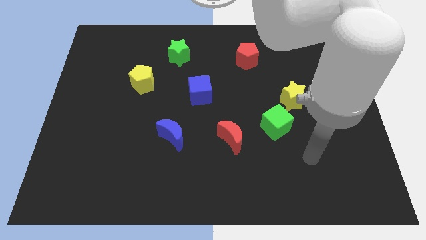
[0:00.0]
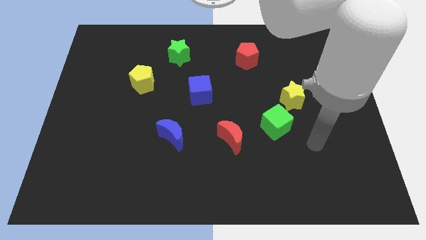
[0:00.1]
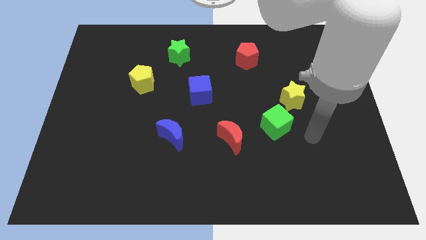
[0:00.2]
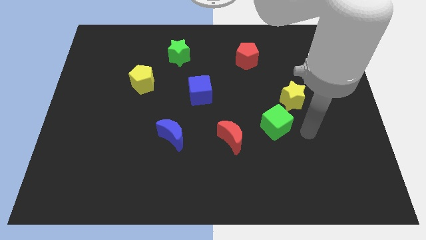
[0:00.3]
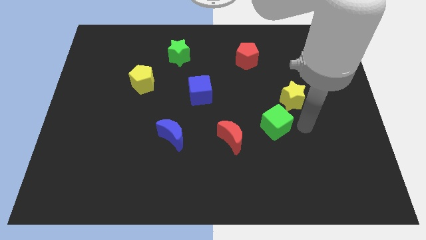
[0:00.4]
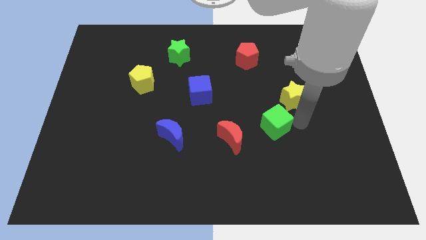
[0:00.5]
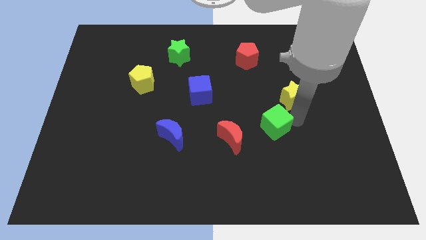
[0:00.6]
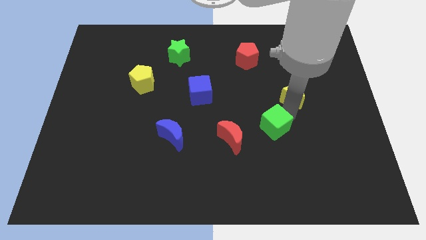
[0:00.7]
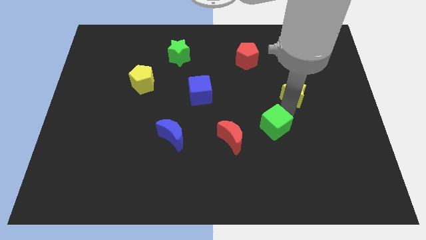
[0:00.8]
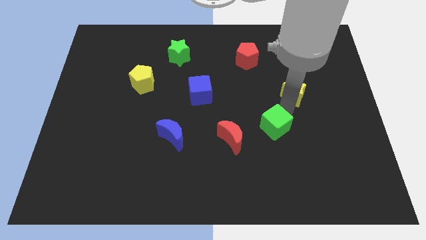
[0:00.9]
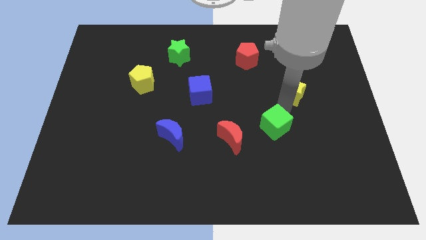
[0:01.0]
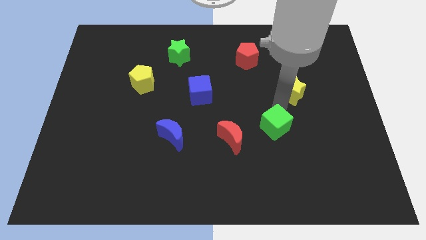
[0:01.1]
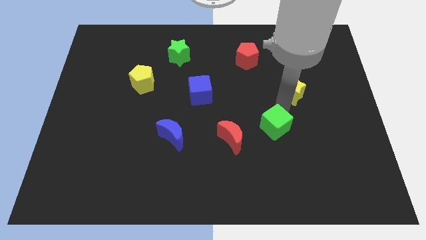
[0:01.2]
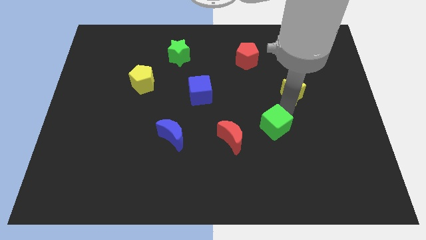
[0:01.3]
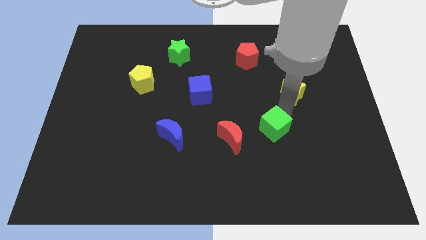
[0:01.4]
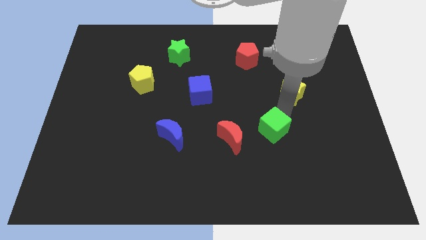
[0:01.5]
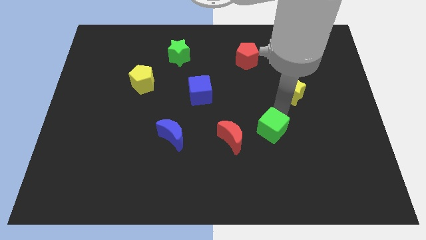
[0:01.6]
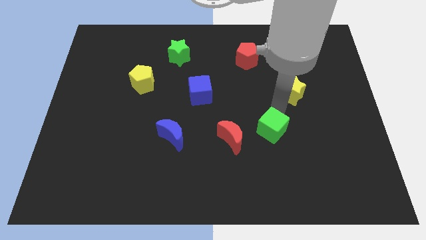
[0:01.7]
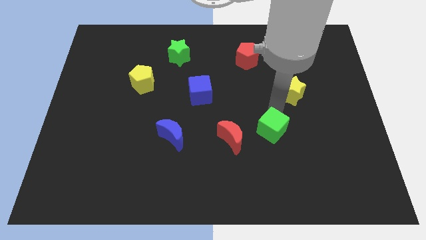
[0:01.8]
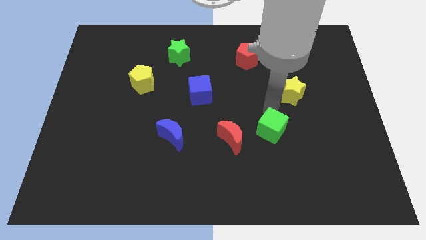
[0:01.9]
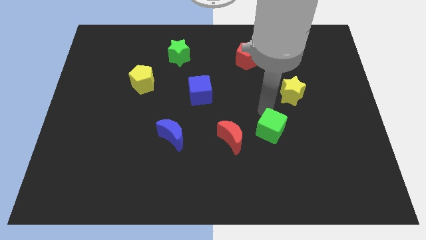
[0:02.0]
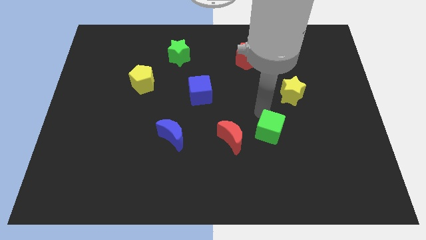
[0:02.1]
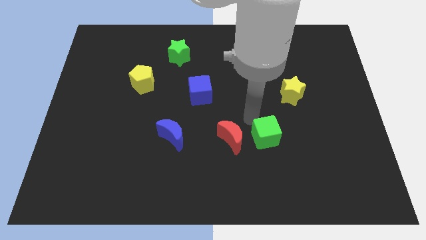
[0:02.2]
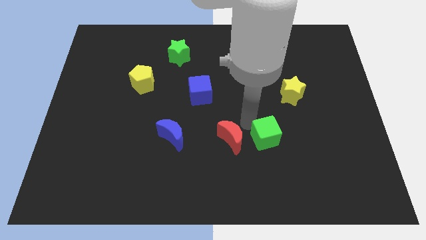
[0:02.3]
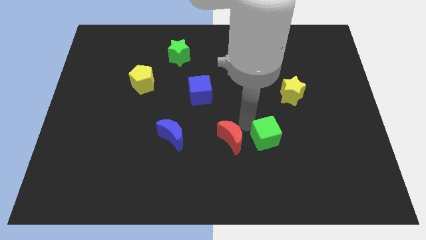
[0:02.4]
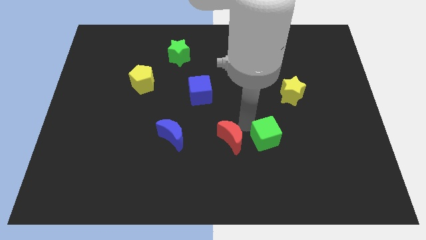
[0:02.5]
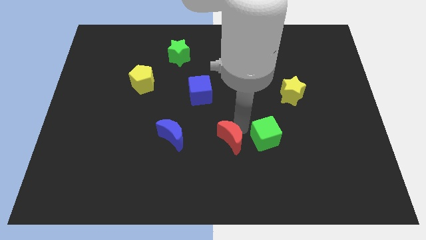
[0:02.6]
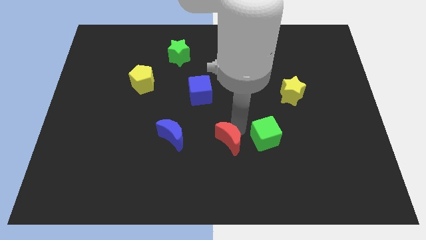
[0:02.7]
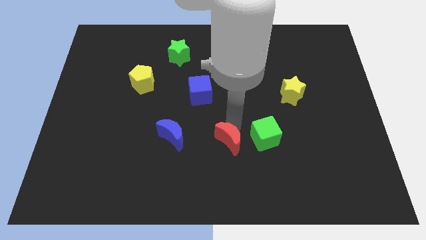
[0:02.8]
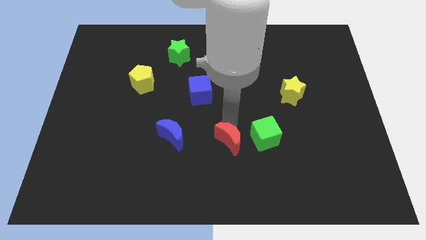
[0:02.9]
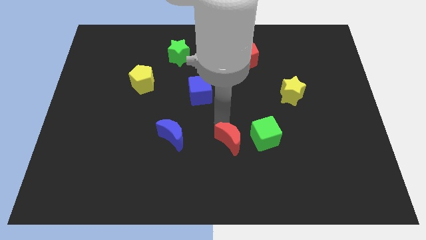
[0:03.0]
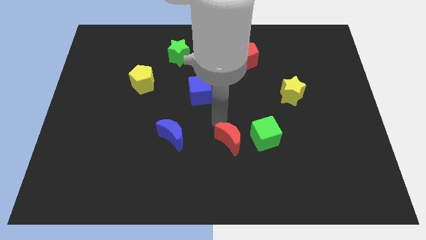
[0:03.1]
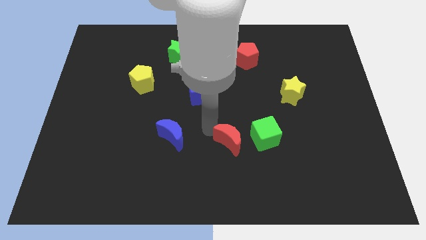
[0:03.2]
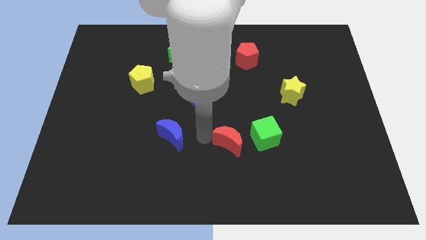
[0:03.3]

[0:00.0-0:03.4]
adjust the red crescent and green cube horizontally to the right side of the blue moon

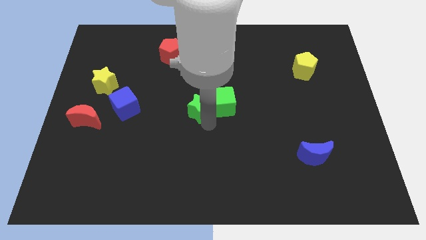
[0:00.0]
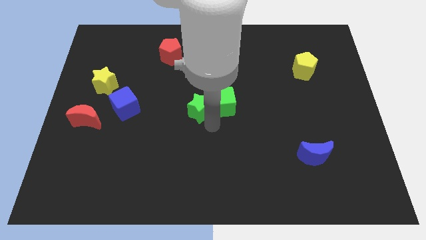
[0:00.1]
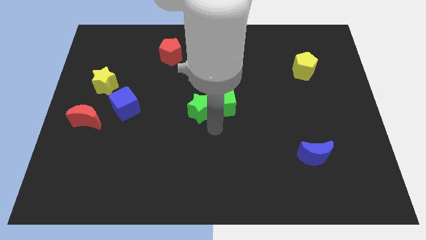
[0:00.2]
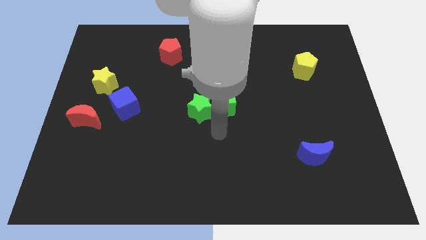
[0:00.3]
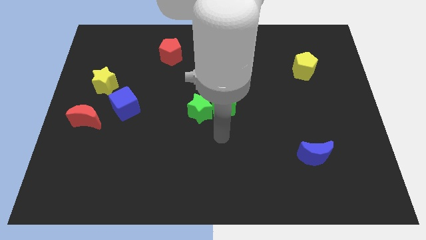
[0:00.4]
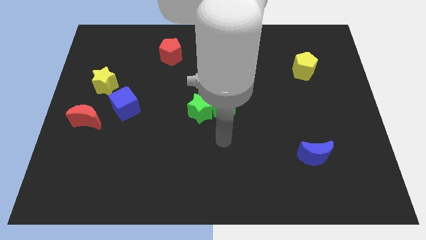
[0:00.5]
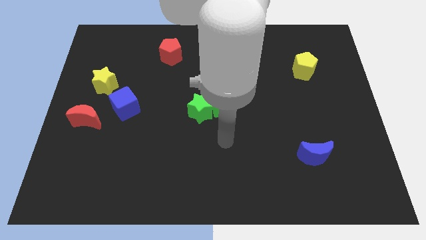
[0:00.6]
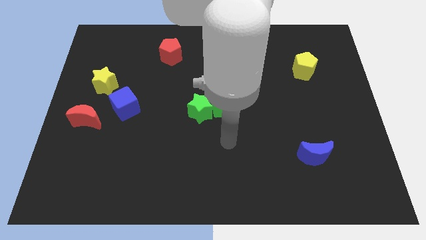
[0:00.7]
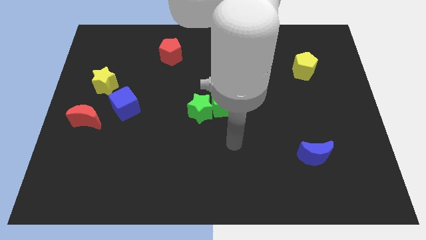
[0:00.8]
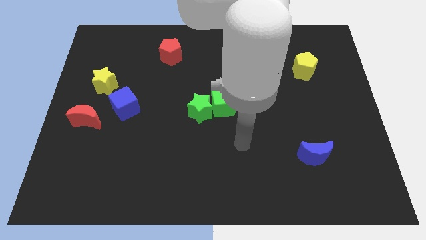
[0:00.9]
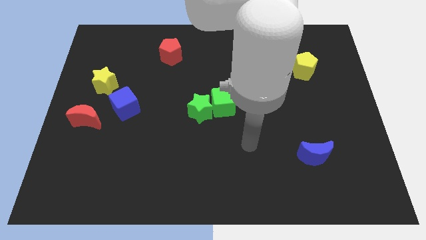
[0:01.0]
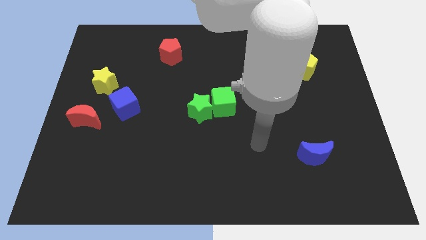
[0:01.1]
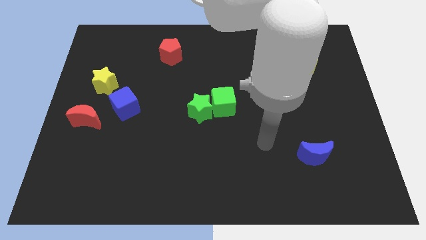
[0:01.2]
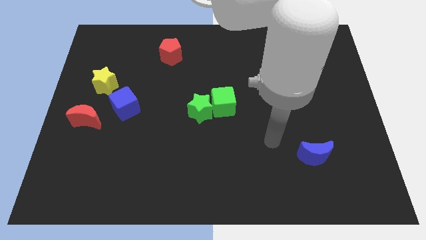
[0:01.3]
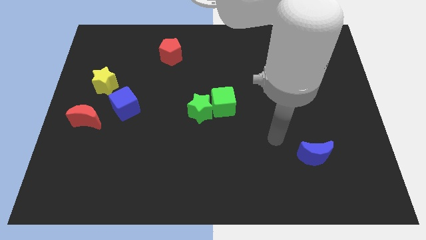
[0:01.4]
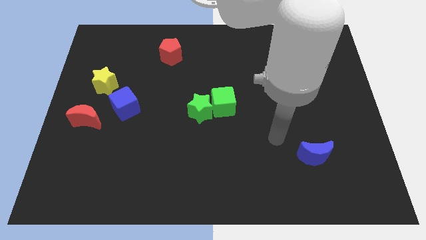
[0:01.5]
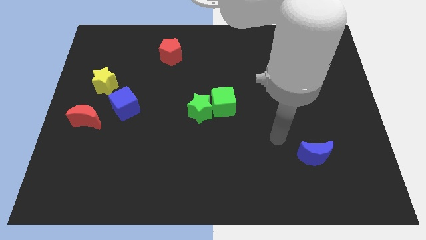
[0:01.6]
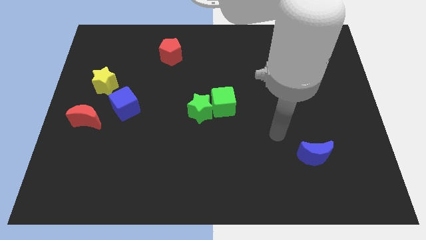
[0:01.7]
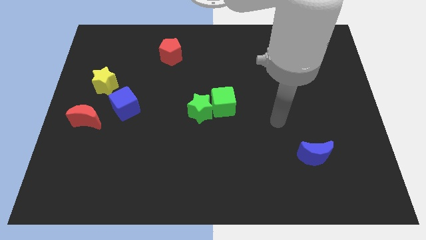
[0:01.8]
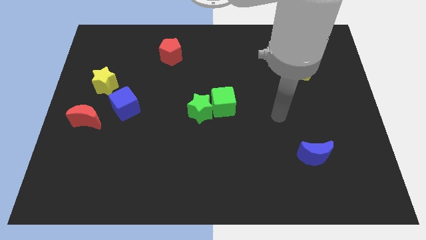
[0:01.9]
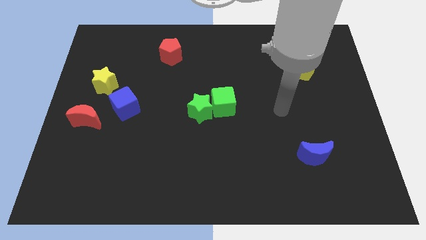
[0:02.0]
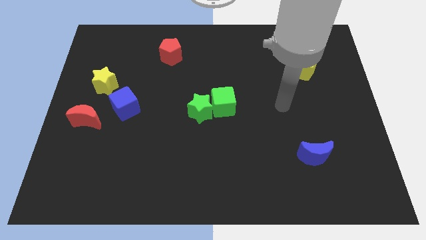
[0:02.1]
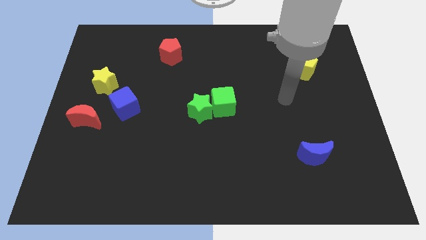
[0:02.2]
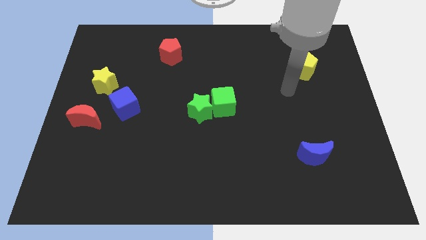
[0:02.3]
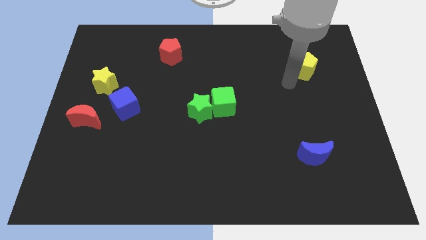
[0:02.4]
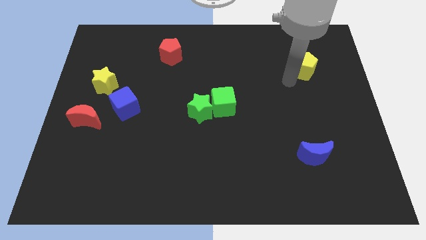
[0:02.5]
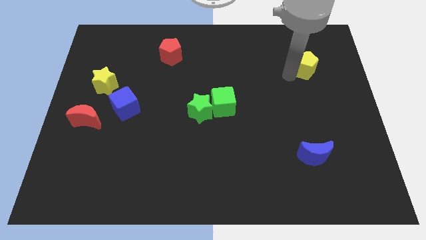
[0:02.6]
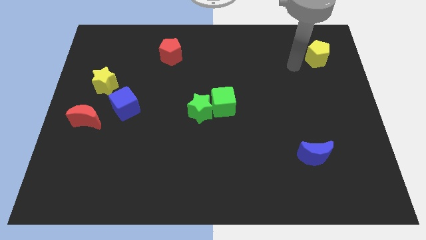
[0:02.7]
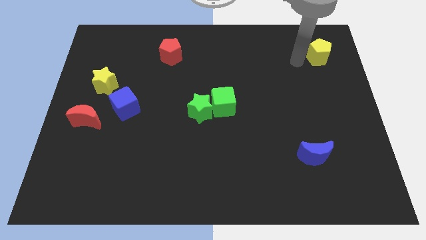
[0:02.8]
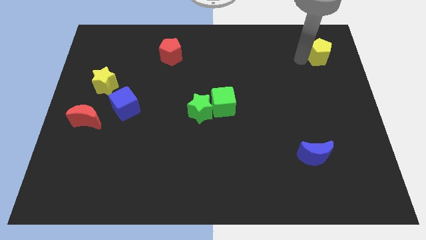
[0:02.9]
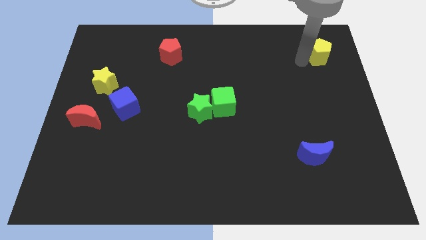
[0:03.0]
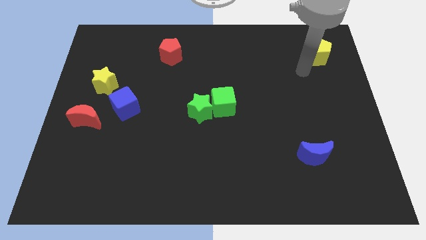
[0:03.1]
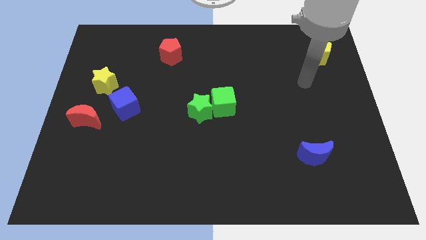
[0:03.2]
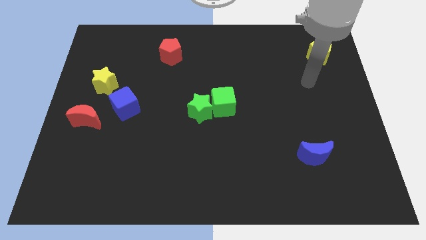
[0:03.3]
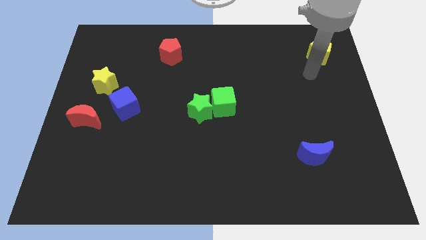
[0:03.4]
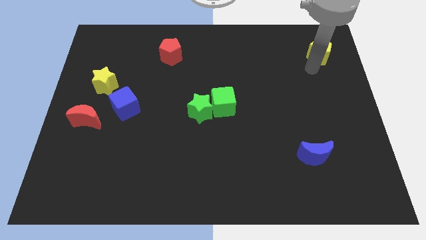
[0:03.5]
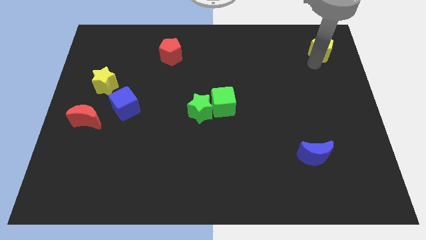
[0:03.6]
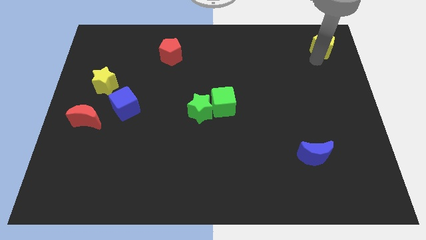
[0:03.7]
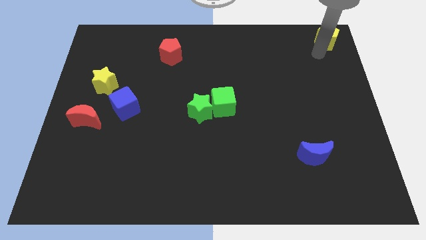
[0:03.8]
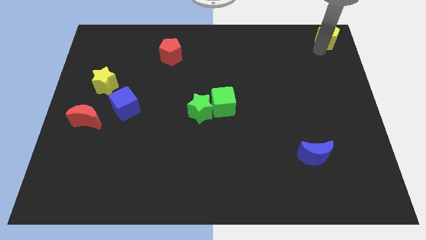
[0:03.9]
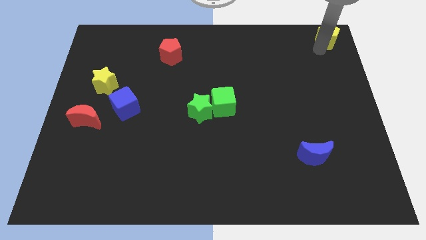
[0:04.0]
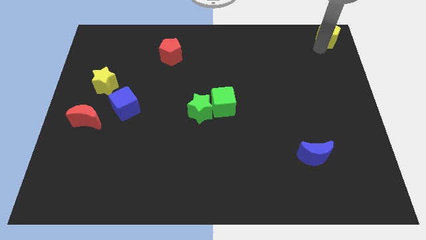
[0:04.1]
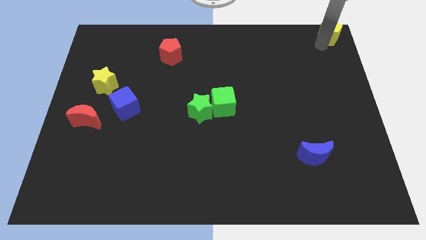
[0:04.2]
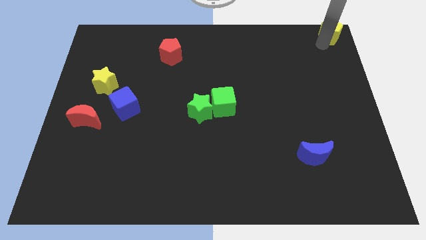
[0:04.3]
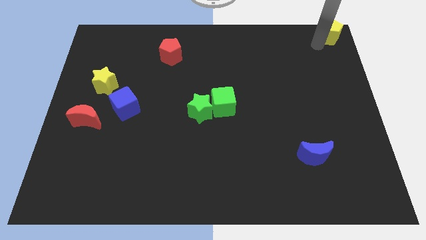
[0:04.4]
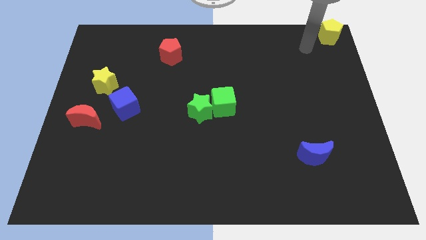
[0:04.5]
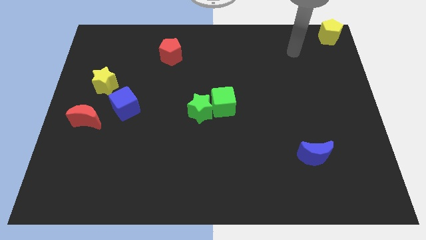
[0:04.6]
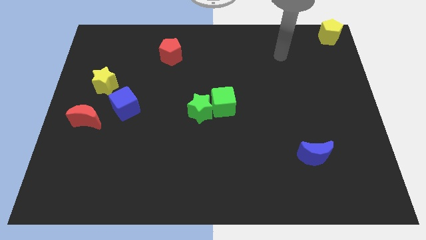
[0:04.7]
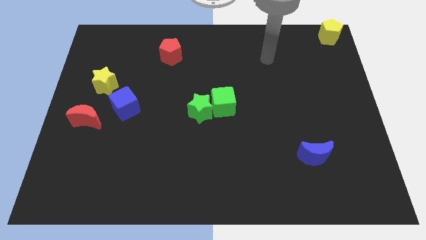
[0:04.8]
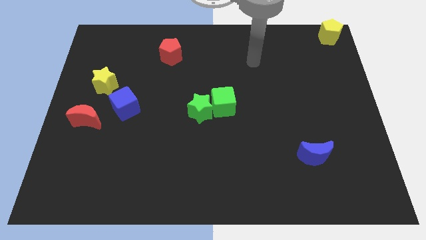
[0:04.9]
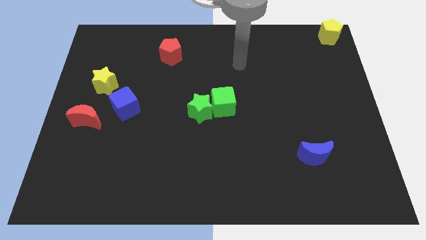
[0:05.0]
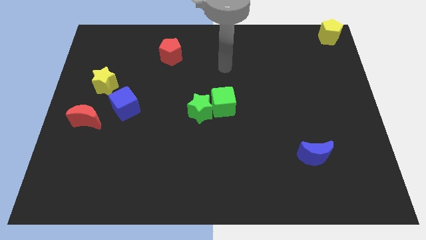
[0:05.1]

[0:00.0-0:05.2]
push the yellow pentagon into the top right corner

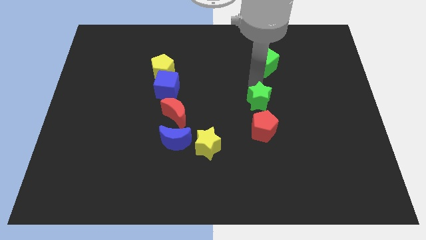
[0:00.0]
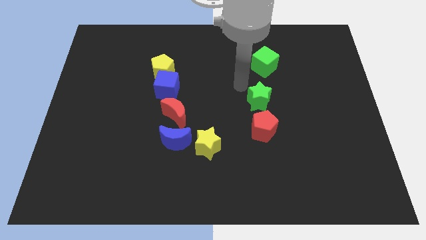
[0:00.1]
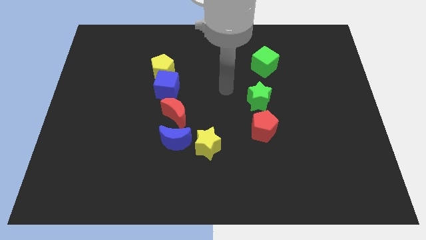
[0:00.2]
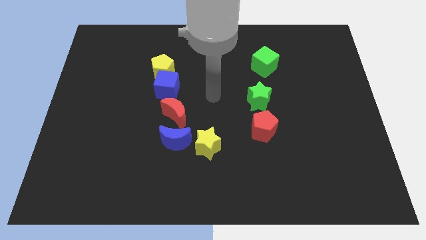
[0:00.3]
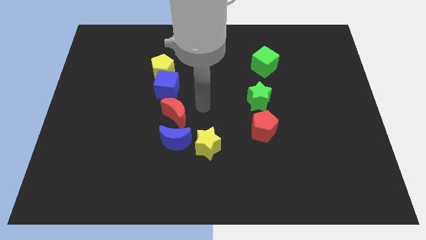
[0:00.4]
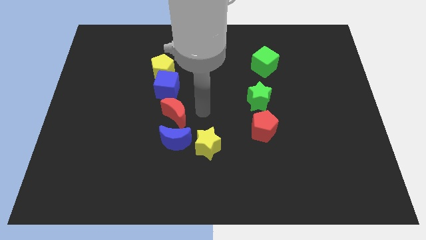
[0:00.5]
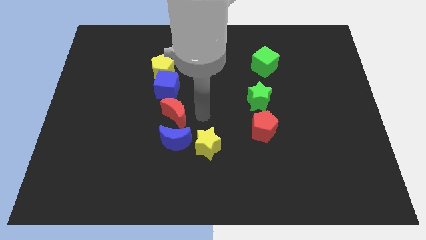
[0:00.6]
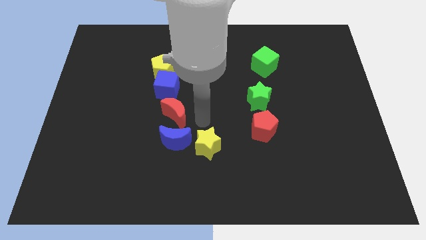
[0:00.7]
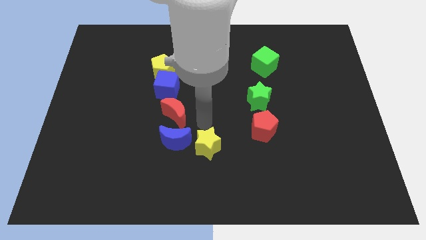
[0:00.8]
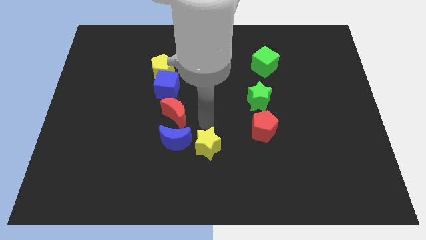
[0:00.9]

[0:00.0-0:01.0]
point your arm at the top side of the yellow star
